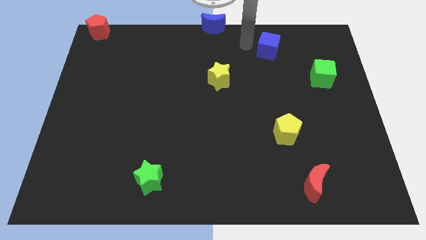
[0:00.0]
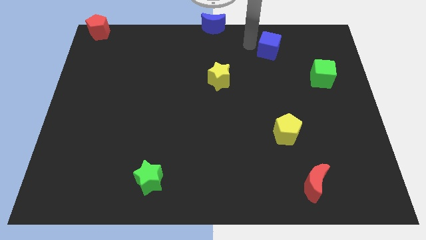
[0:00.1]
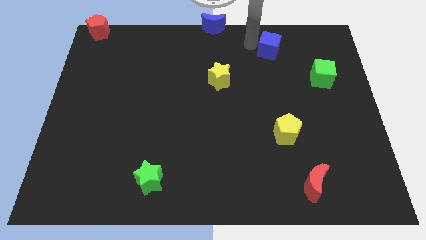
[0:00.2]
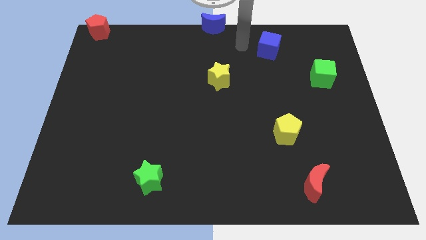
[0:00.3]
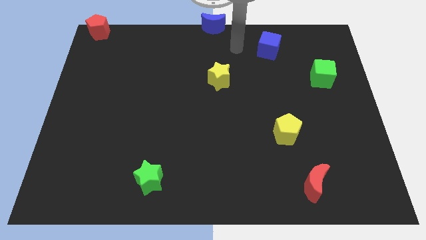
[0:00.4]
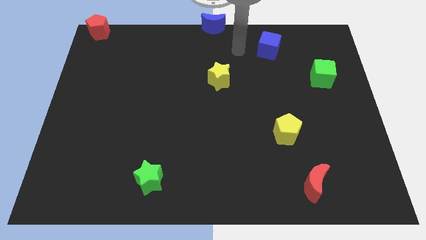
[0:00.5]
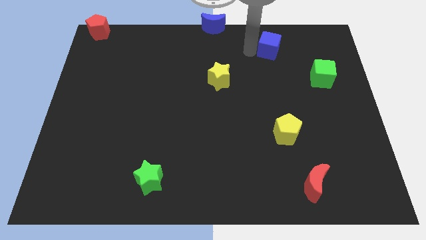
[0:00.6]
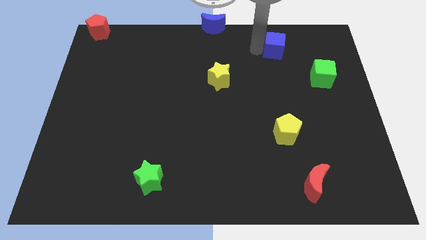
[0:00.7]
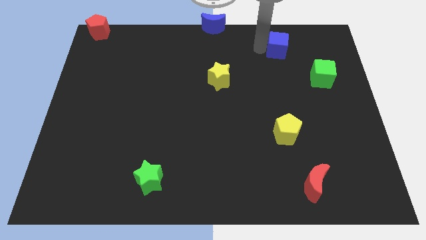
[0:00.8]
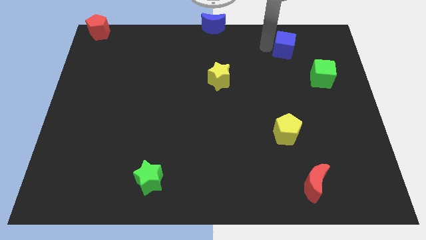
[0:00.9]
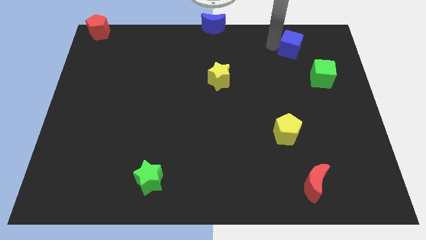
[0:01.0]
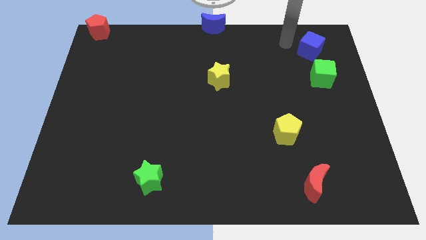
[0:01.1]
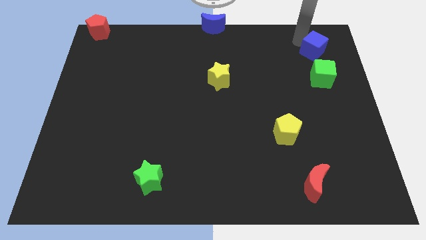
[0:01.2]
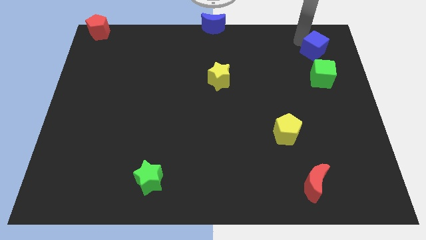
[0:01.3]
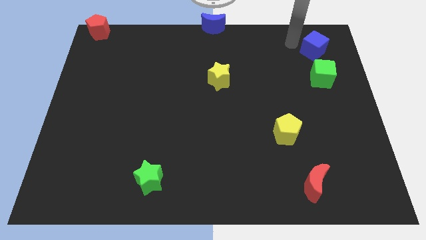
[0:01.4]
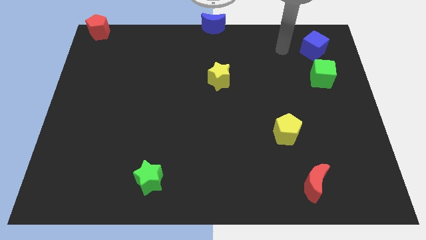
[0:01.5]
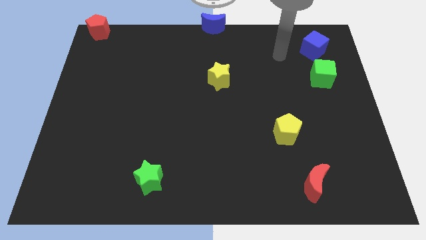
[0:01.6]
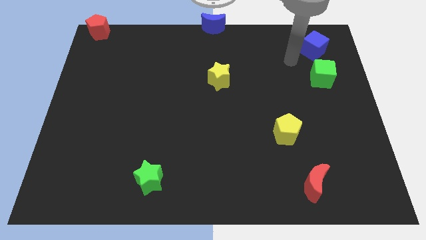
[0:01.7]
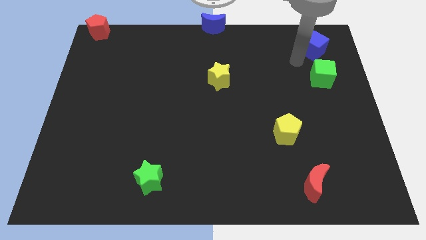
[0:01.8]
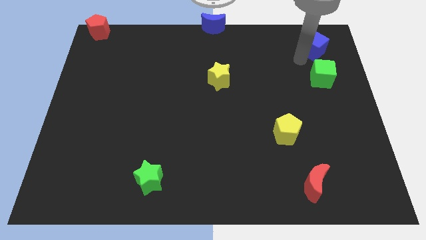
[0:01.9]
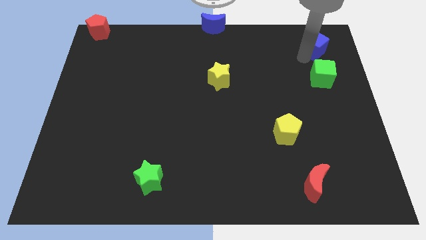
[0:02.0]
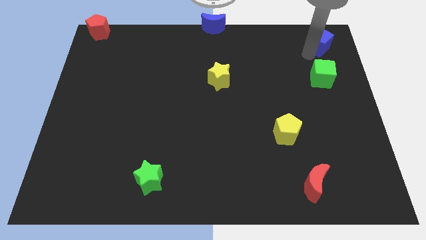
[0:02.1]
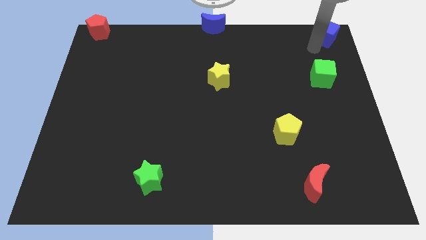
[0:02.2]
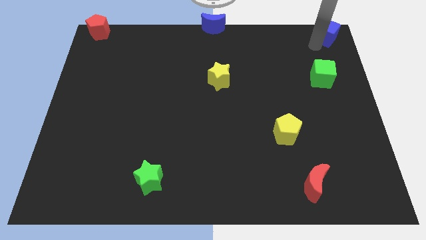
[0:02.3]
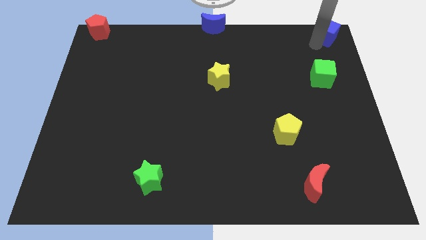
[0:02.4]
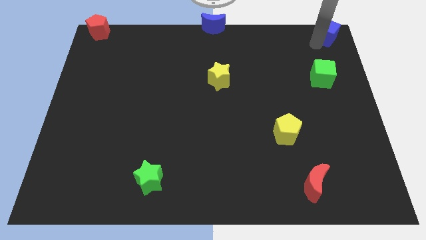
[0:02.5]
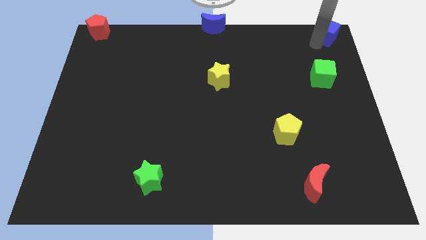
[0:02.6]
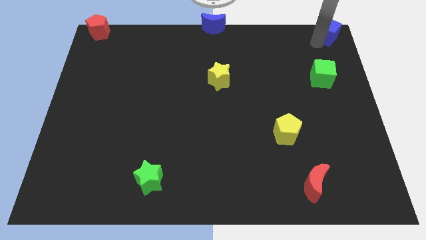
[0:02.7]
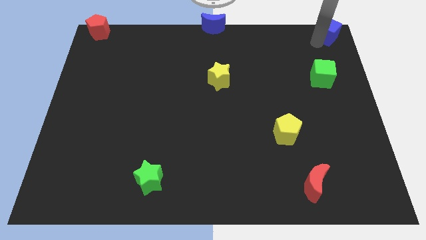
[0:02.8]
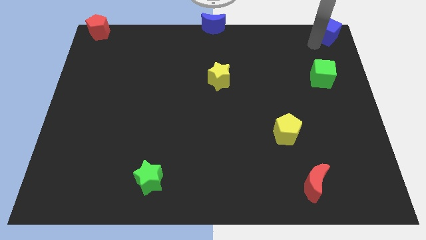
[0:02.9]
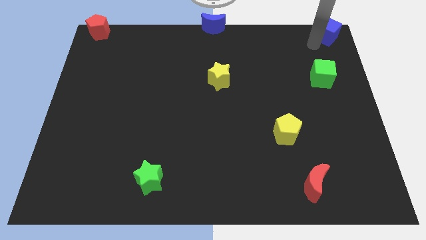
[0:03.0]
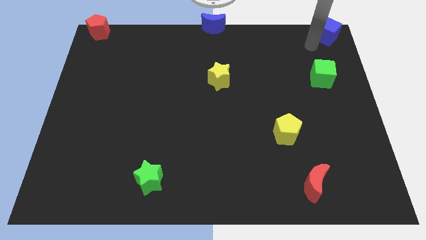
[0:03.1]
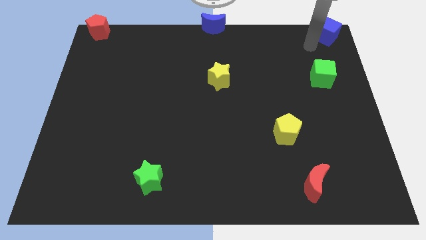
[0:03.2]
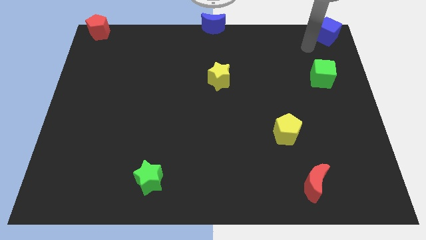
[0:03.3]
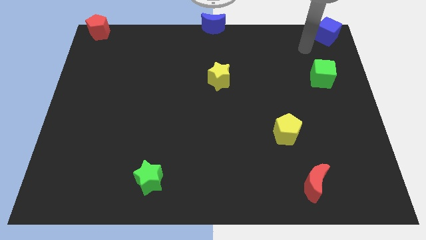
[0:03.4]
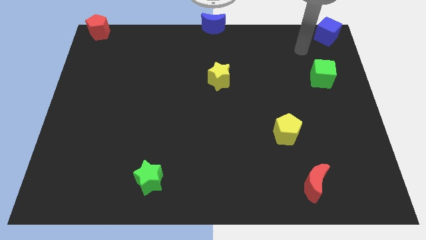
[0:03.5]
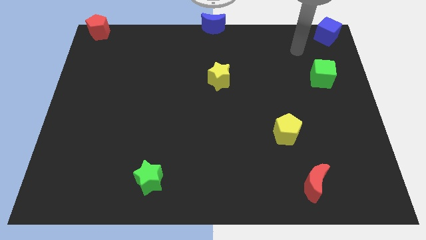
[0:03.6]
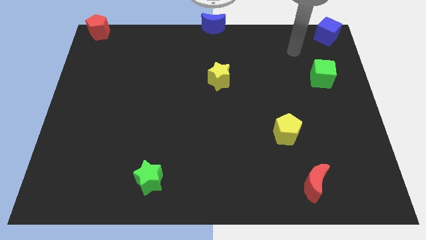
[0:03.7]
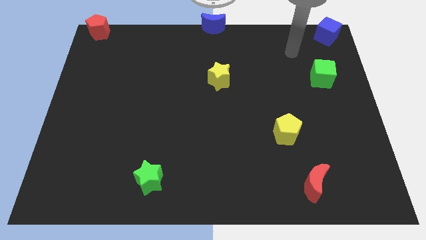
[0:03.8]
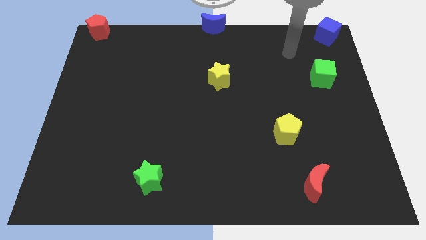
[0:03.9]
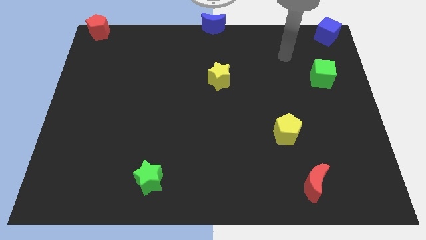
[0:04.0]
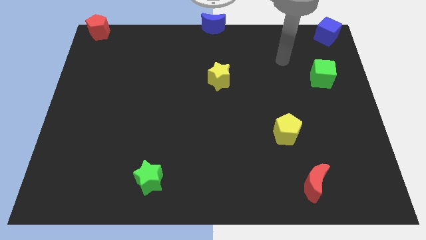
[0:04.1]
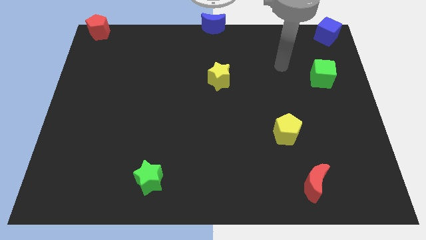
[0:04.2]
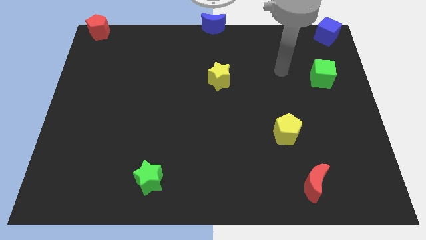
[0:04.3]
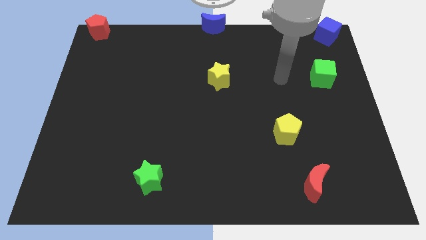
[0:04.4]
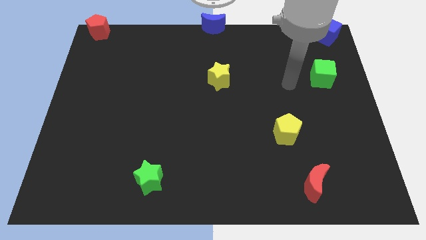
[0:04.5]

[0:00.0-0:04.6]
place the blue cube to the top right corner of the board

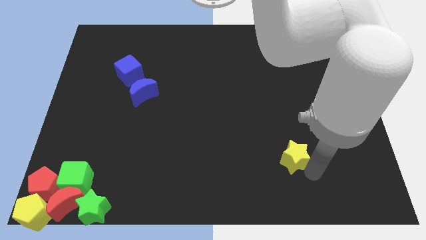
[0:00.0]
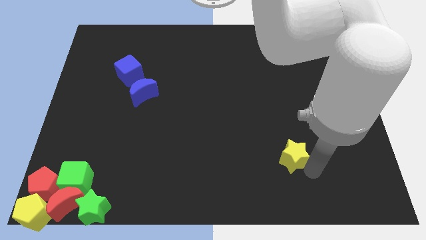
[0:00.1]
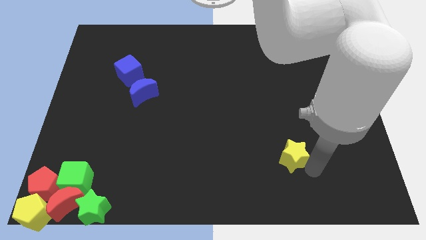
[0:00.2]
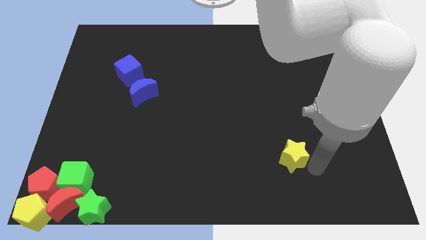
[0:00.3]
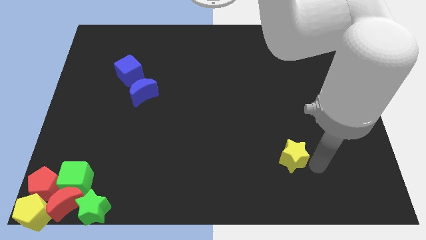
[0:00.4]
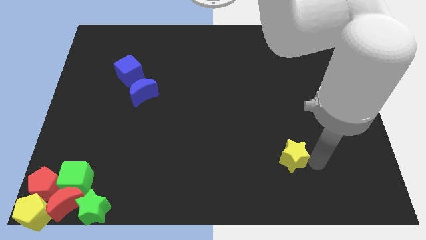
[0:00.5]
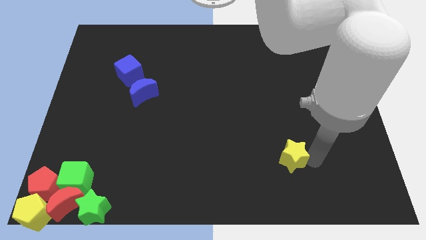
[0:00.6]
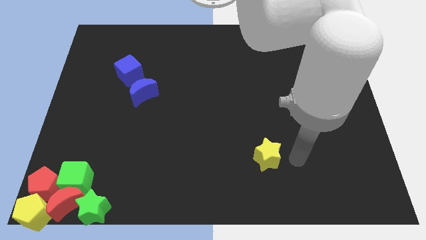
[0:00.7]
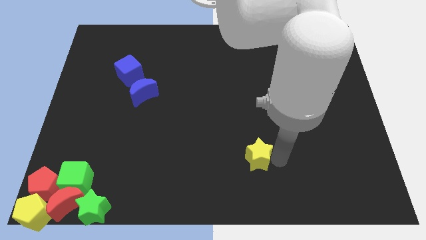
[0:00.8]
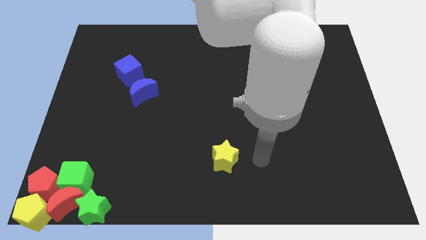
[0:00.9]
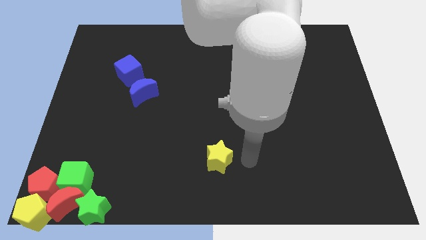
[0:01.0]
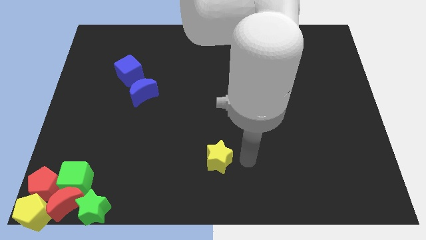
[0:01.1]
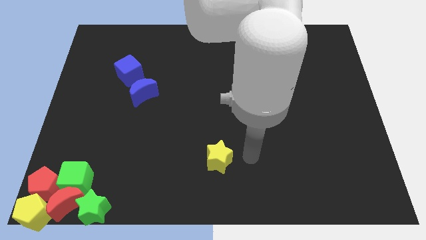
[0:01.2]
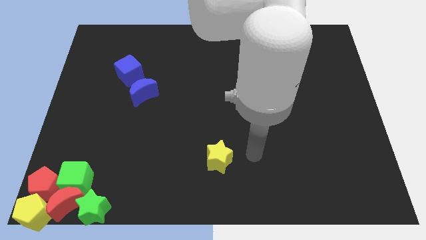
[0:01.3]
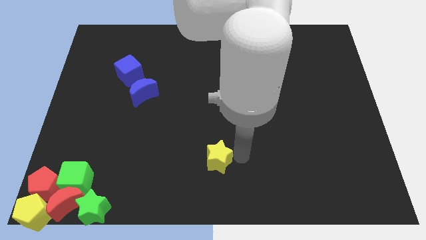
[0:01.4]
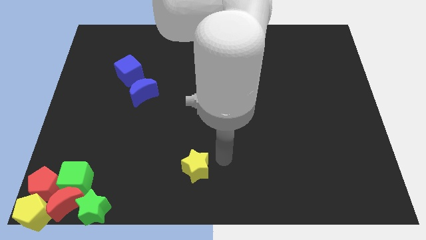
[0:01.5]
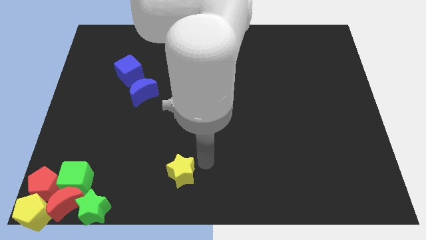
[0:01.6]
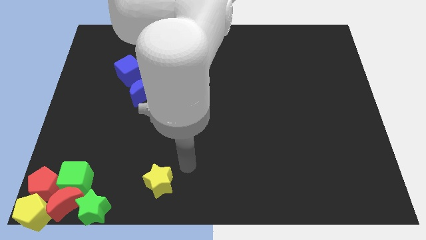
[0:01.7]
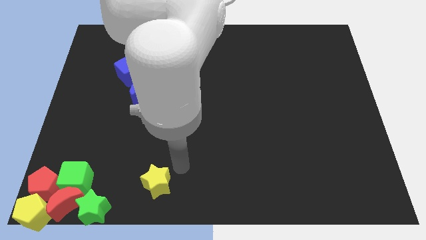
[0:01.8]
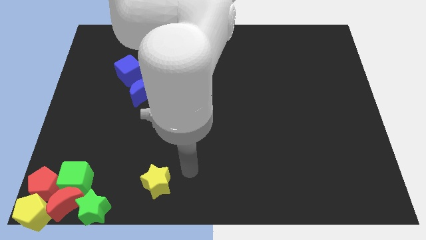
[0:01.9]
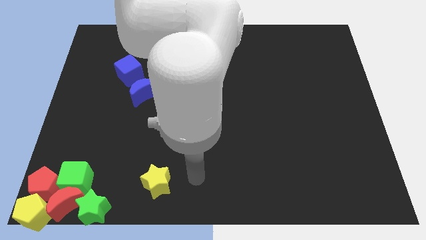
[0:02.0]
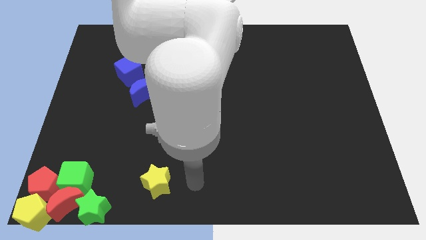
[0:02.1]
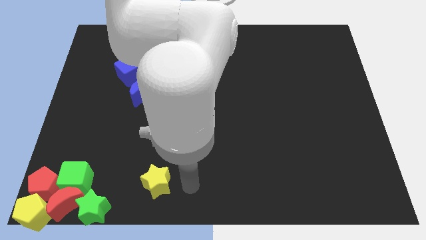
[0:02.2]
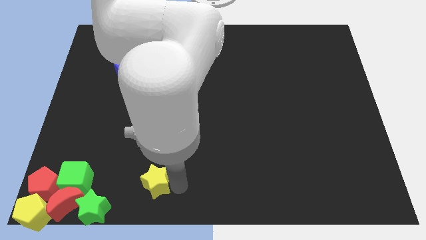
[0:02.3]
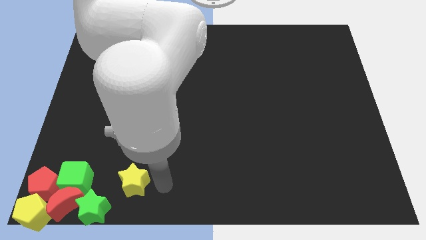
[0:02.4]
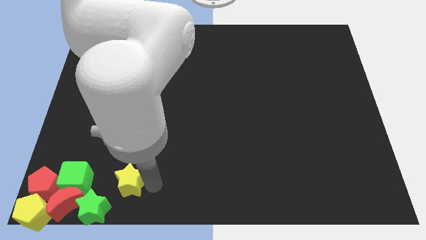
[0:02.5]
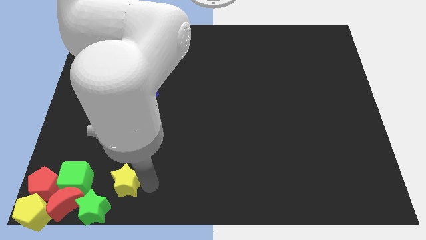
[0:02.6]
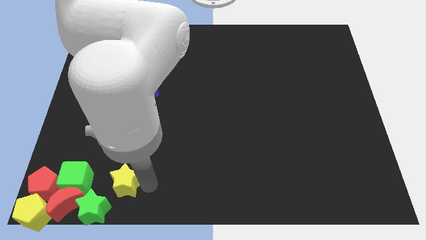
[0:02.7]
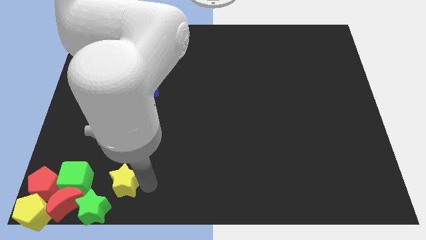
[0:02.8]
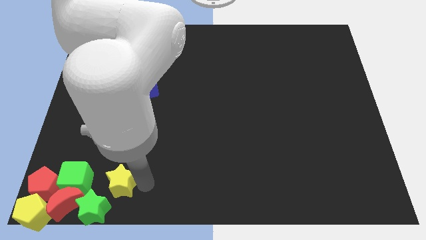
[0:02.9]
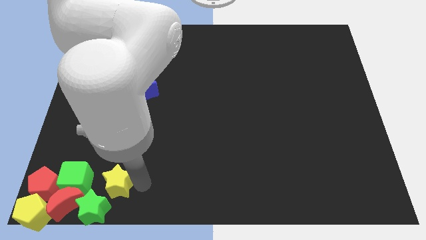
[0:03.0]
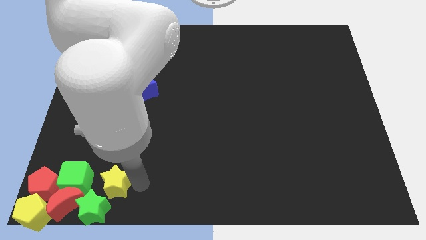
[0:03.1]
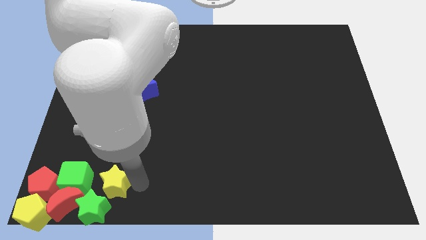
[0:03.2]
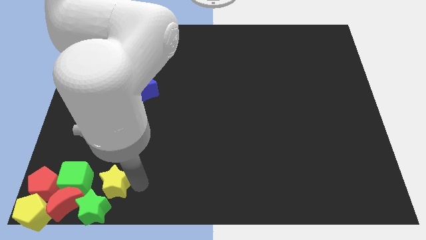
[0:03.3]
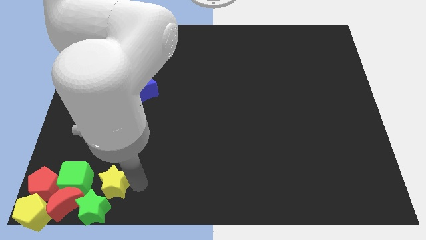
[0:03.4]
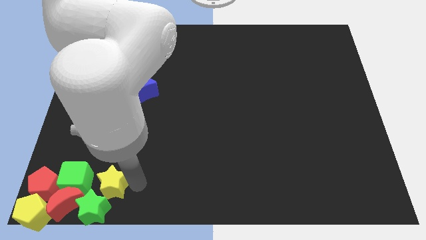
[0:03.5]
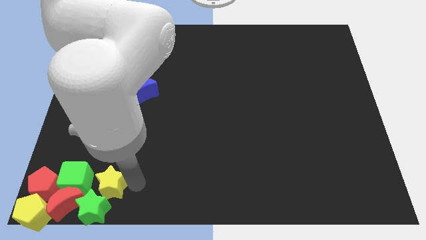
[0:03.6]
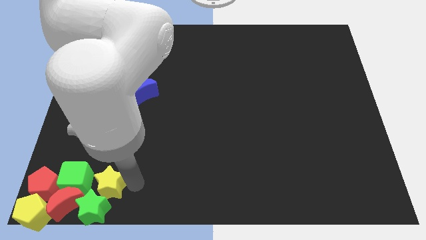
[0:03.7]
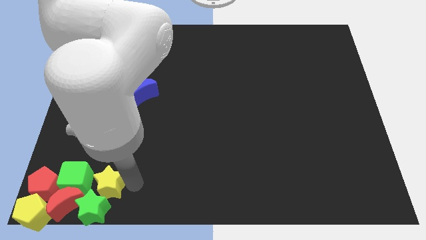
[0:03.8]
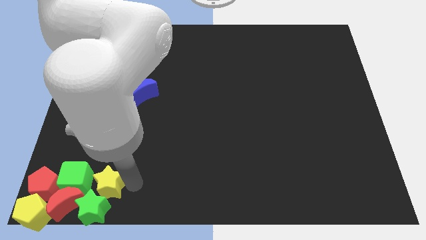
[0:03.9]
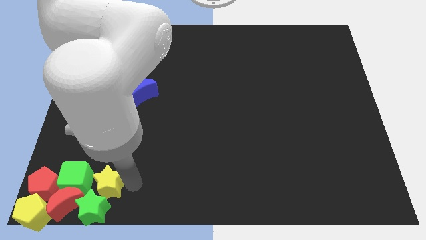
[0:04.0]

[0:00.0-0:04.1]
place the yellow star below the blue crescent

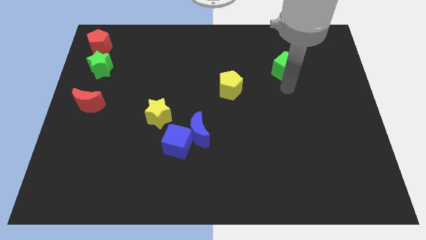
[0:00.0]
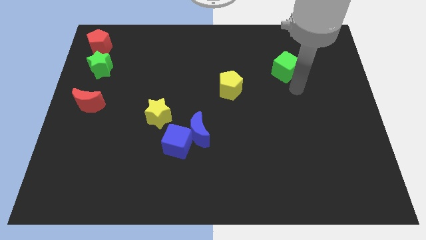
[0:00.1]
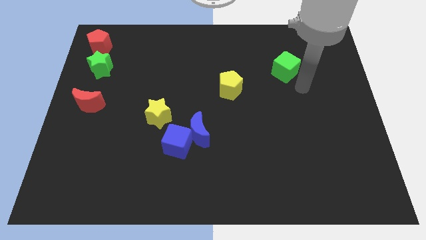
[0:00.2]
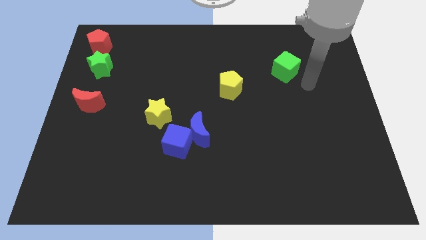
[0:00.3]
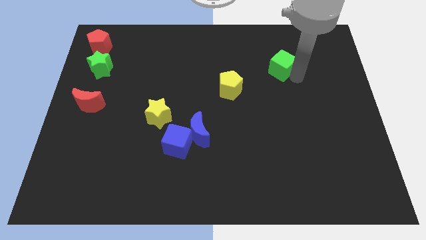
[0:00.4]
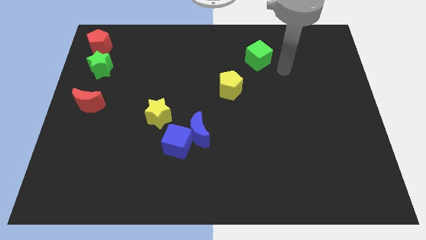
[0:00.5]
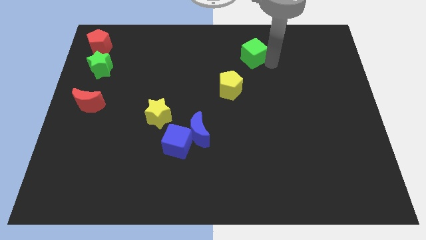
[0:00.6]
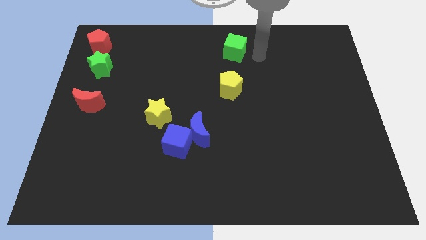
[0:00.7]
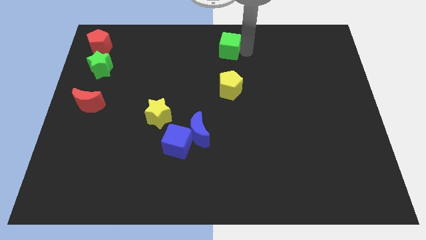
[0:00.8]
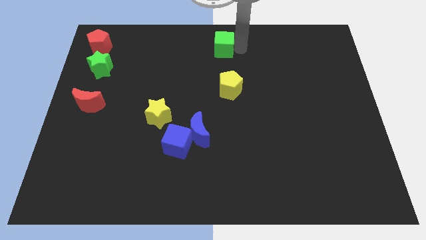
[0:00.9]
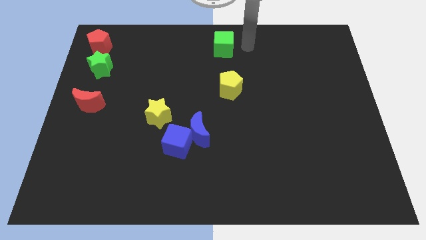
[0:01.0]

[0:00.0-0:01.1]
push green cube towards the top center
